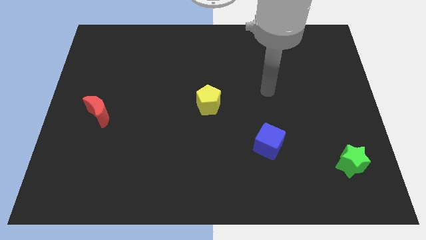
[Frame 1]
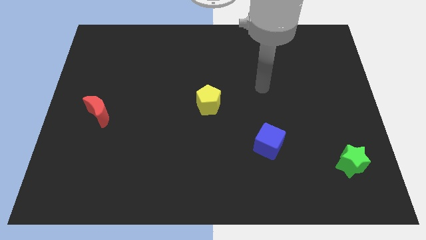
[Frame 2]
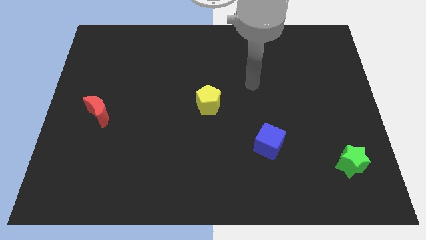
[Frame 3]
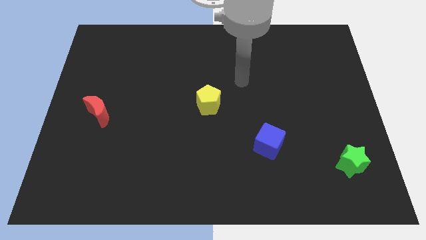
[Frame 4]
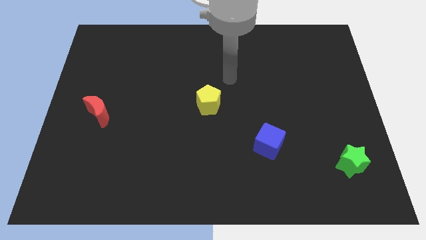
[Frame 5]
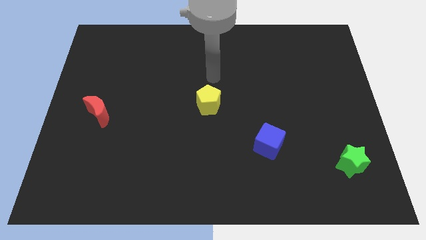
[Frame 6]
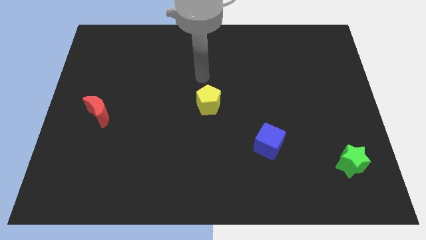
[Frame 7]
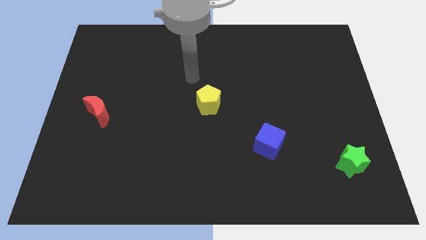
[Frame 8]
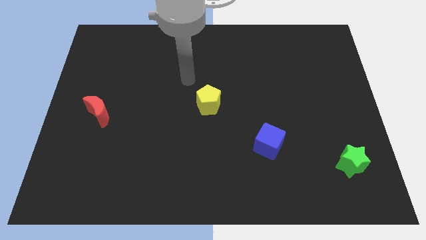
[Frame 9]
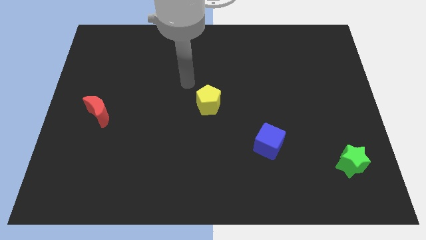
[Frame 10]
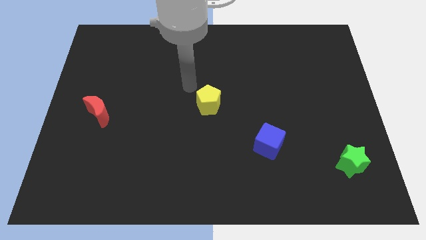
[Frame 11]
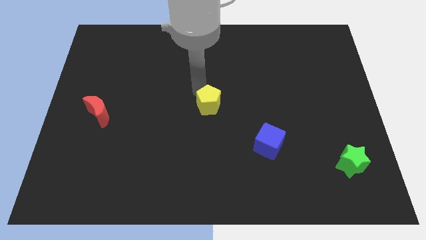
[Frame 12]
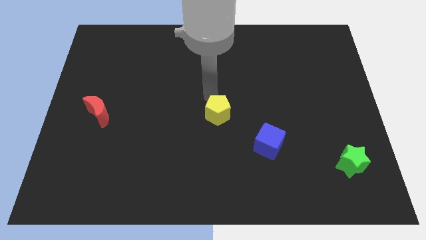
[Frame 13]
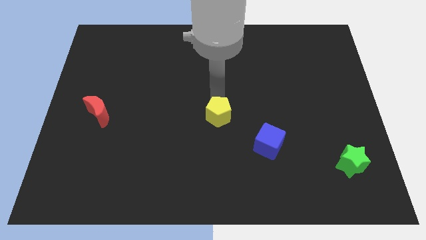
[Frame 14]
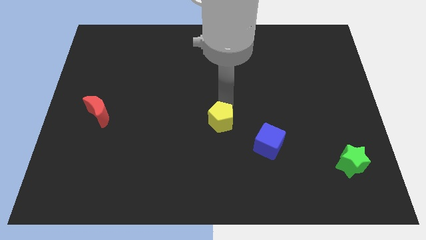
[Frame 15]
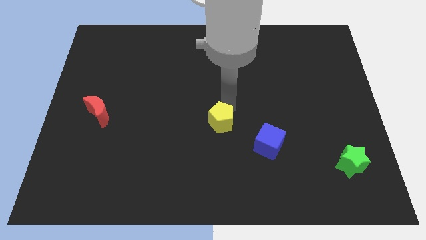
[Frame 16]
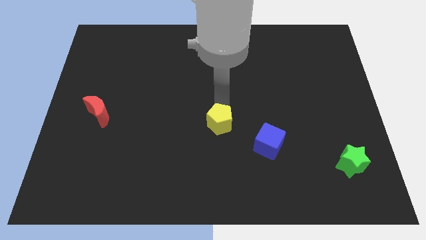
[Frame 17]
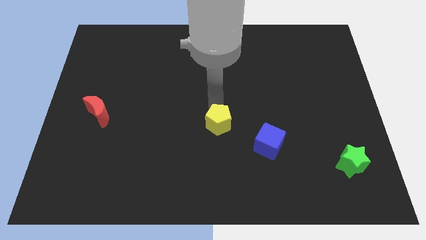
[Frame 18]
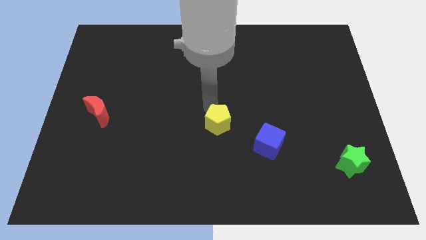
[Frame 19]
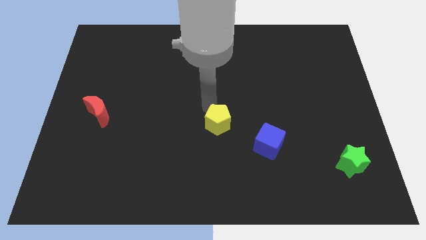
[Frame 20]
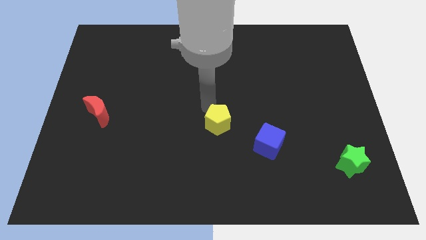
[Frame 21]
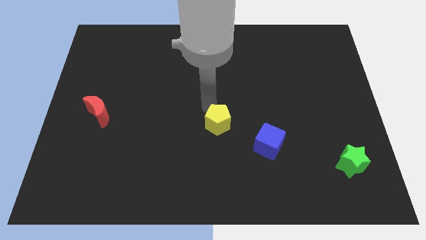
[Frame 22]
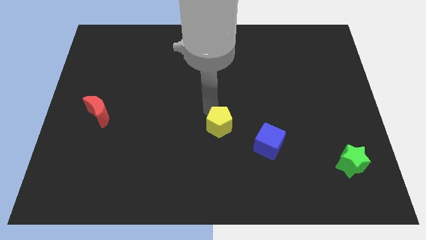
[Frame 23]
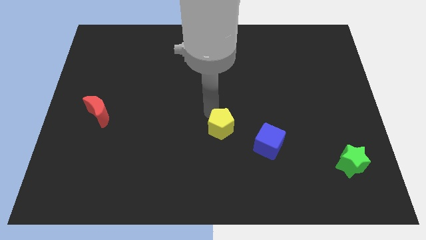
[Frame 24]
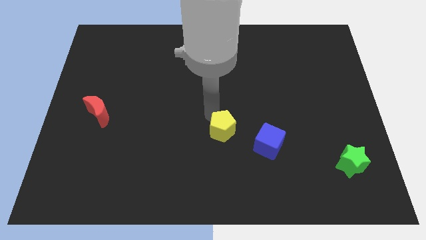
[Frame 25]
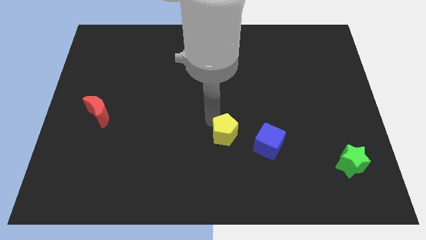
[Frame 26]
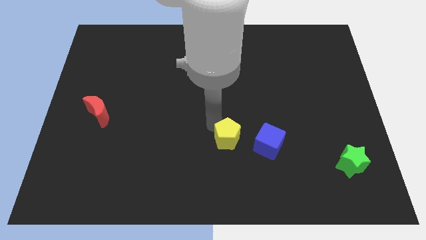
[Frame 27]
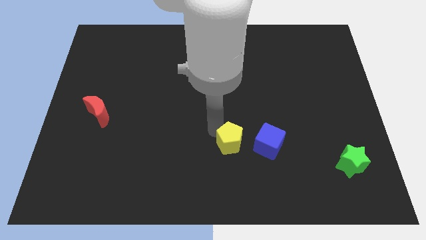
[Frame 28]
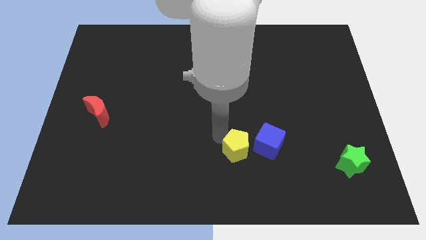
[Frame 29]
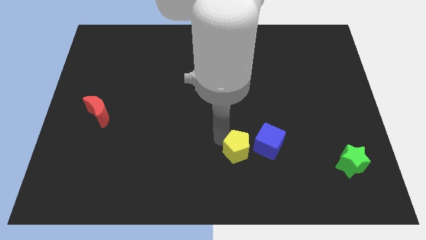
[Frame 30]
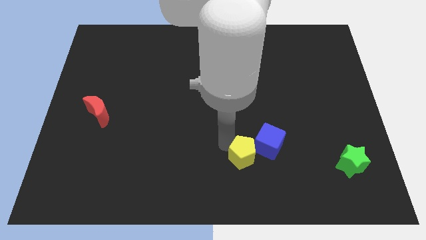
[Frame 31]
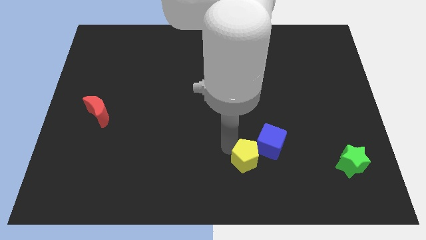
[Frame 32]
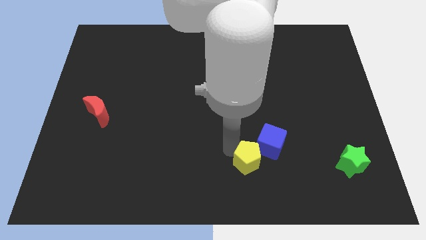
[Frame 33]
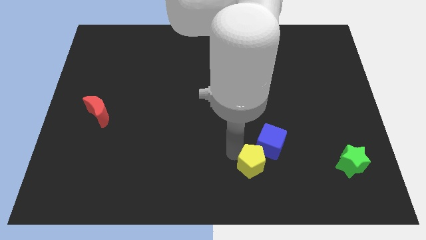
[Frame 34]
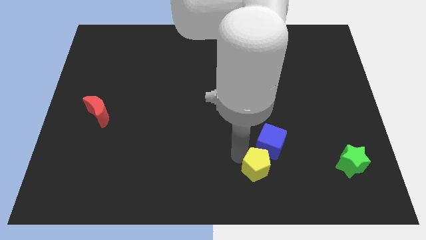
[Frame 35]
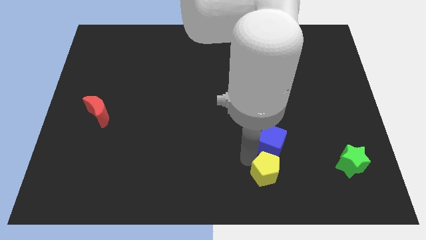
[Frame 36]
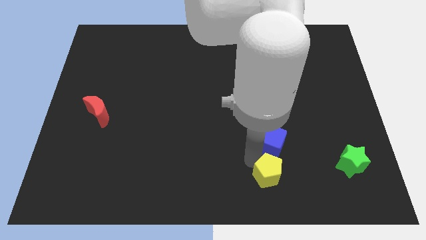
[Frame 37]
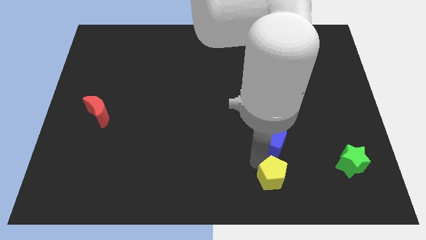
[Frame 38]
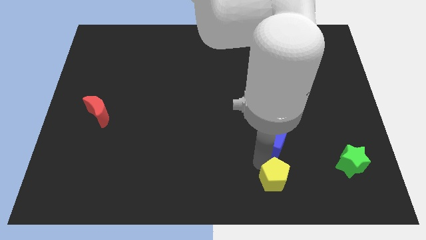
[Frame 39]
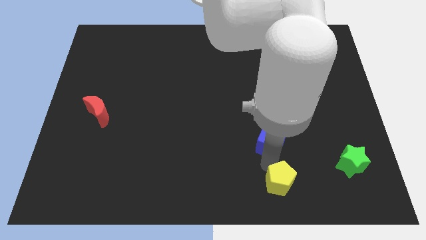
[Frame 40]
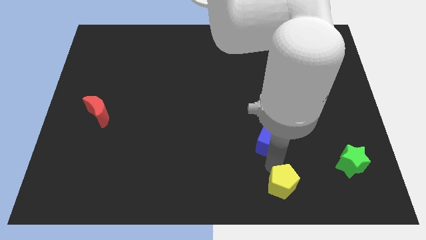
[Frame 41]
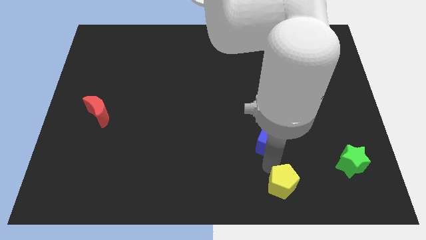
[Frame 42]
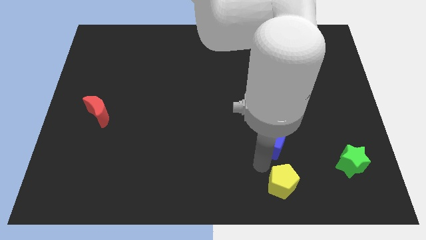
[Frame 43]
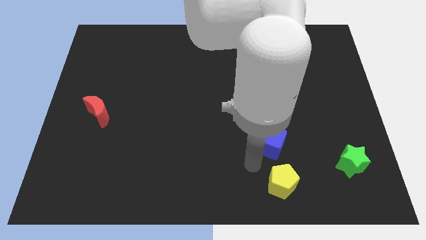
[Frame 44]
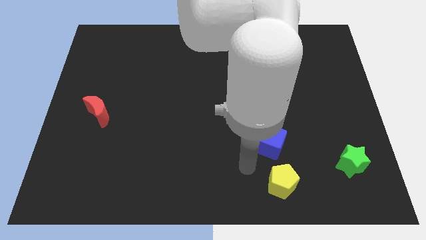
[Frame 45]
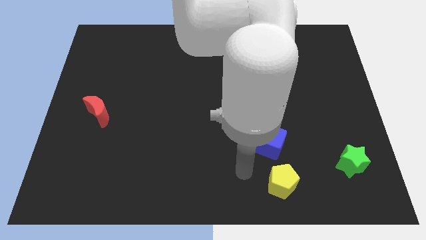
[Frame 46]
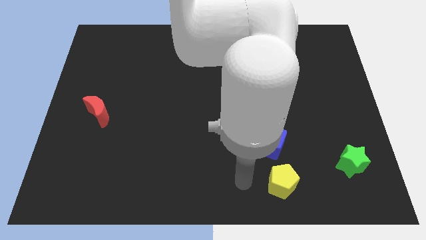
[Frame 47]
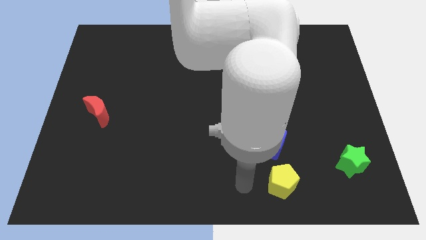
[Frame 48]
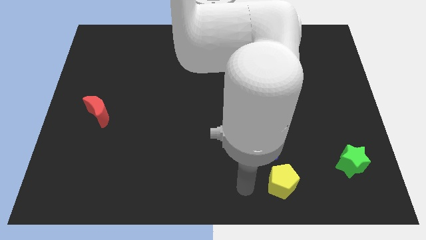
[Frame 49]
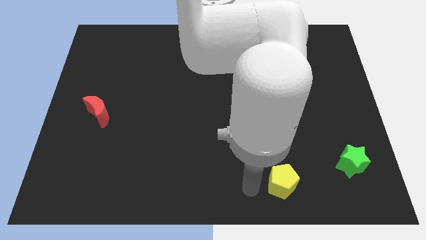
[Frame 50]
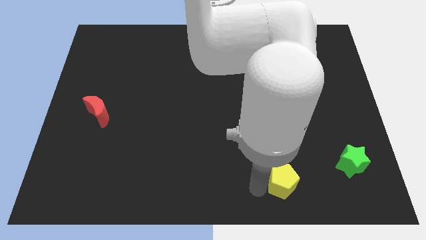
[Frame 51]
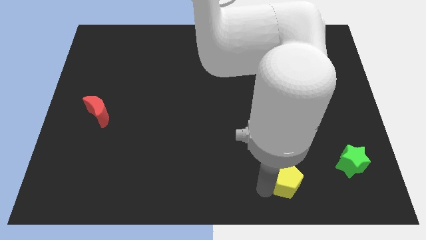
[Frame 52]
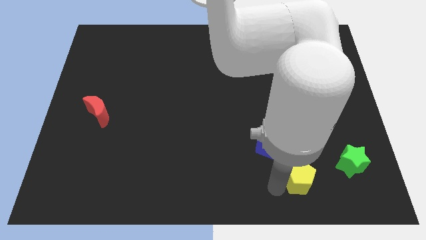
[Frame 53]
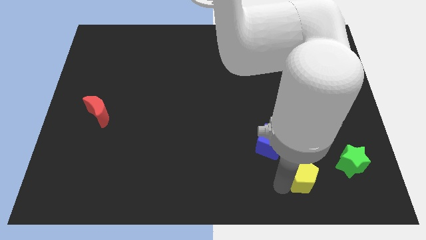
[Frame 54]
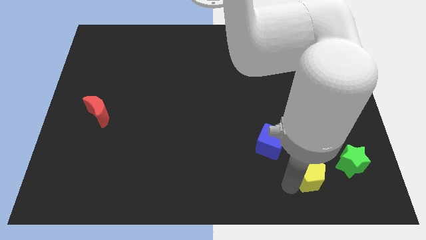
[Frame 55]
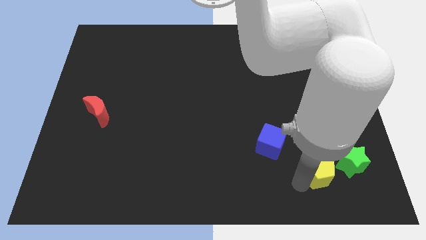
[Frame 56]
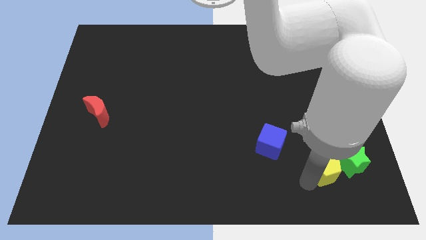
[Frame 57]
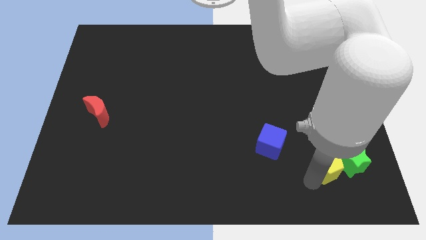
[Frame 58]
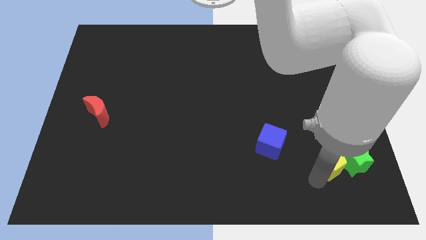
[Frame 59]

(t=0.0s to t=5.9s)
move the yellow block to the green star

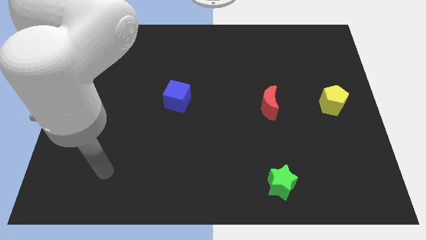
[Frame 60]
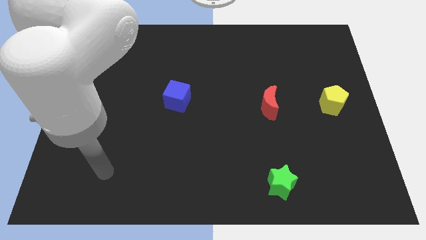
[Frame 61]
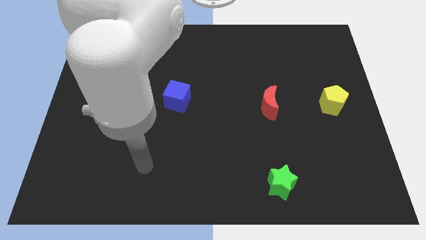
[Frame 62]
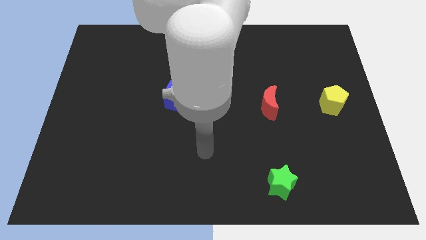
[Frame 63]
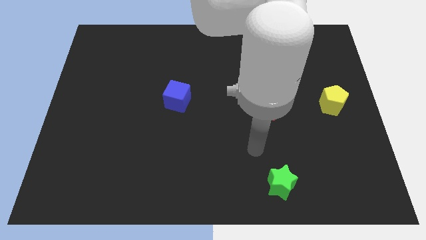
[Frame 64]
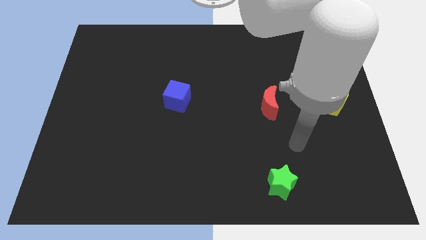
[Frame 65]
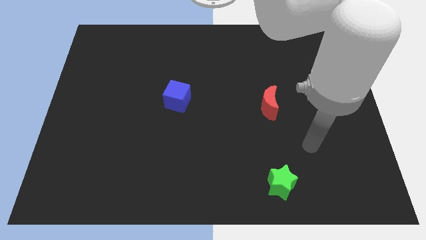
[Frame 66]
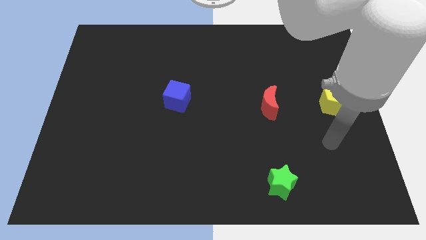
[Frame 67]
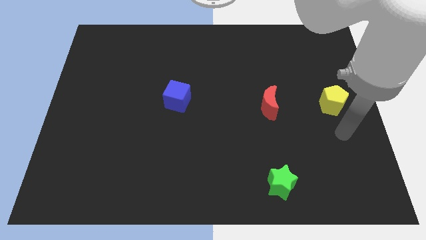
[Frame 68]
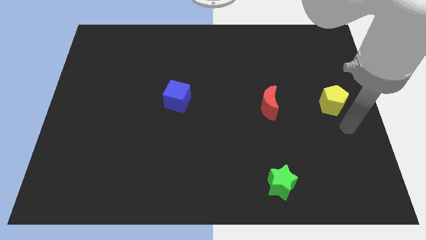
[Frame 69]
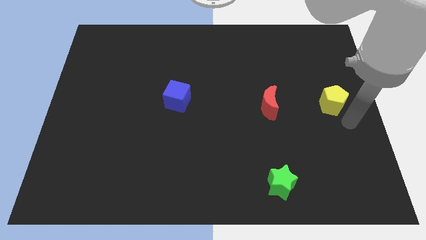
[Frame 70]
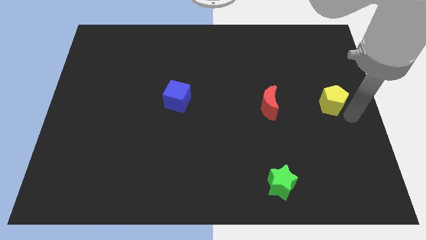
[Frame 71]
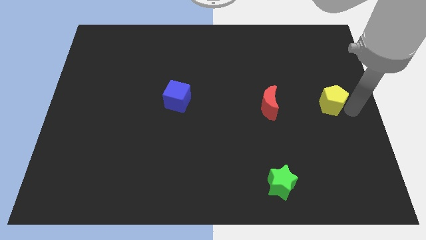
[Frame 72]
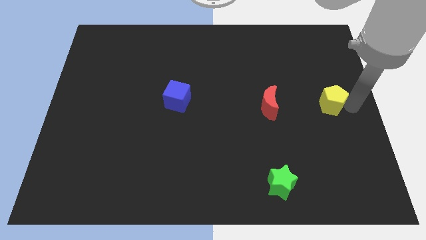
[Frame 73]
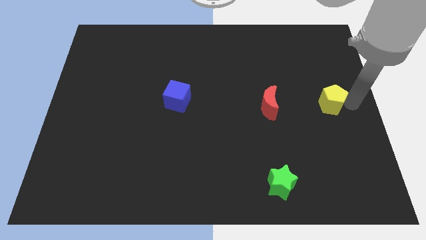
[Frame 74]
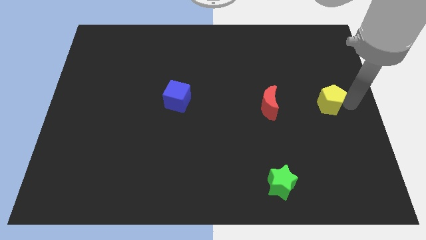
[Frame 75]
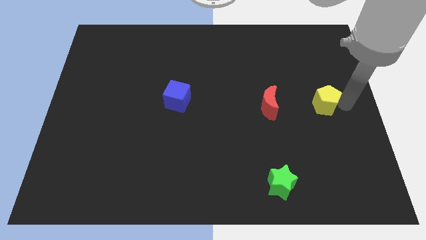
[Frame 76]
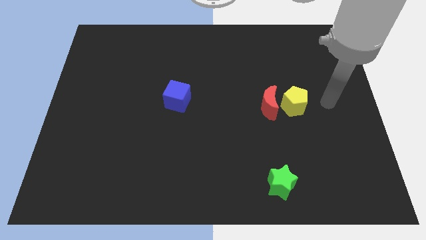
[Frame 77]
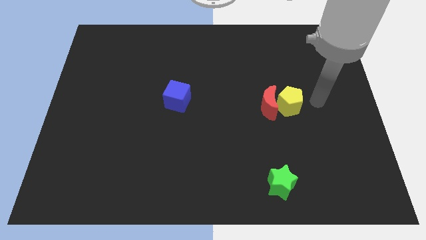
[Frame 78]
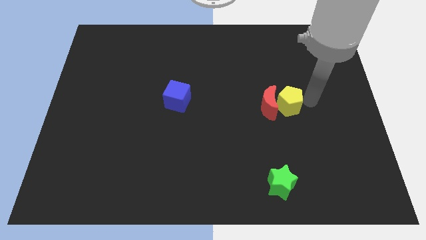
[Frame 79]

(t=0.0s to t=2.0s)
push the yellow pentagon next to the red moon

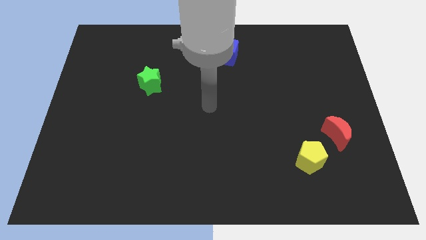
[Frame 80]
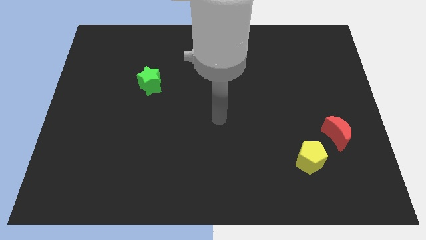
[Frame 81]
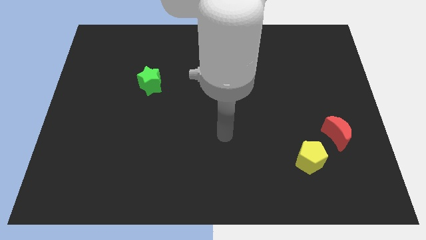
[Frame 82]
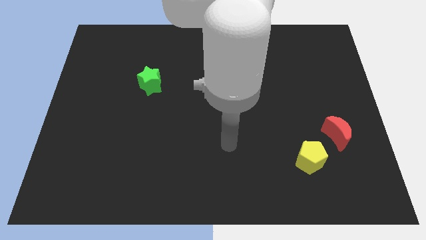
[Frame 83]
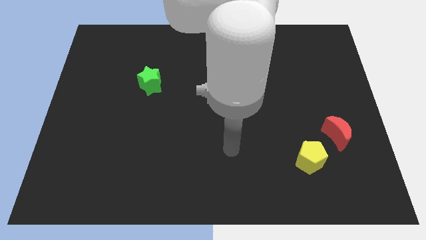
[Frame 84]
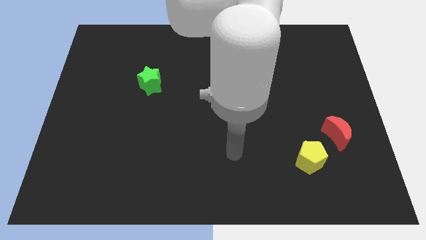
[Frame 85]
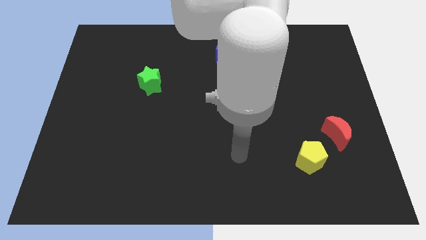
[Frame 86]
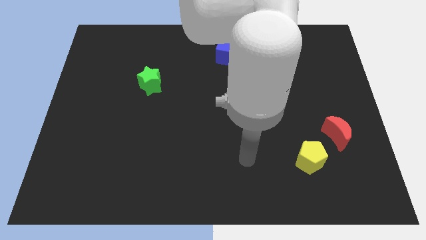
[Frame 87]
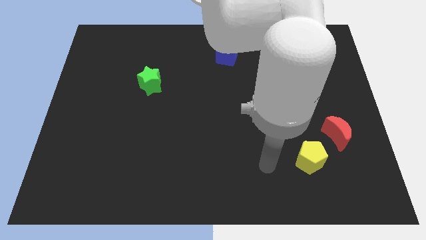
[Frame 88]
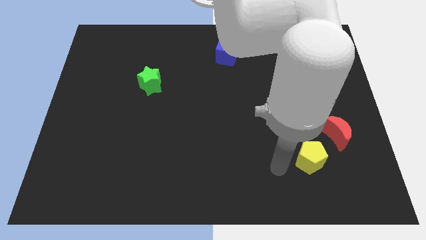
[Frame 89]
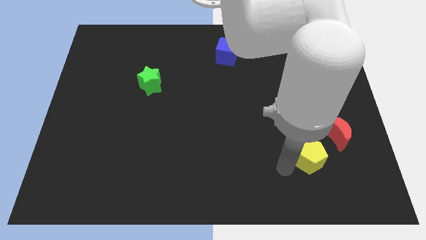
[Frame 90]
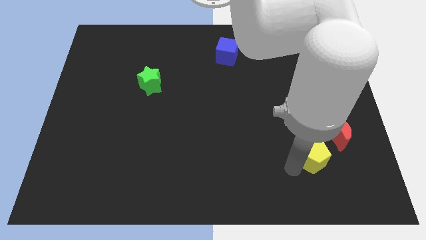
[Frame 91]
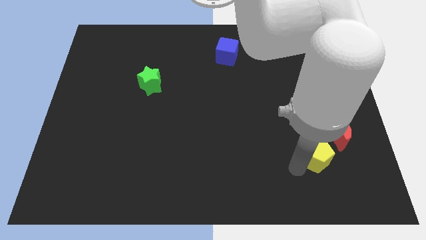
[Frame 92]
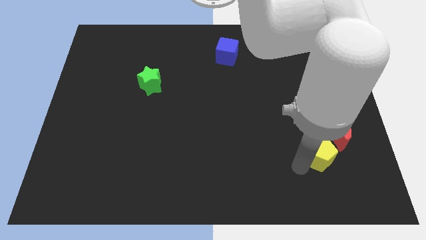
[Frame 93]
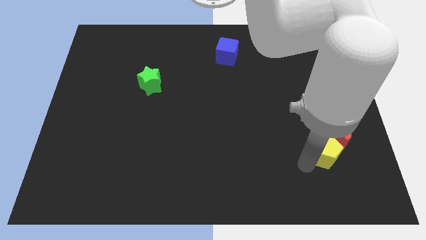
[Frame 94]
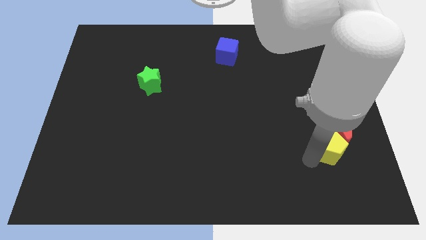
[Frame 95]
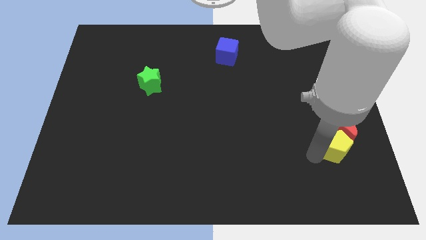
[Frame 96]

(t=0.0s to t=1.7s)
slide the yellow block close to the red moon
